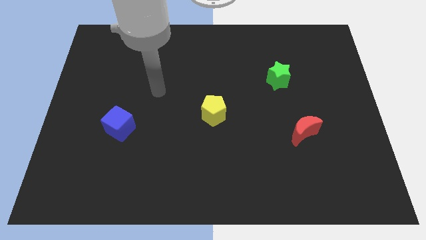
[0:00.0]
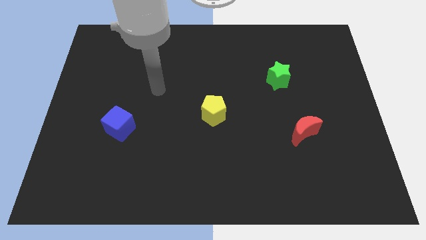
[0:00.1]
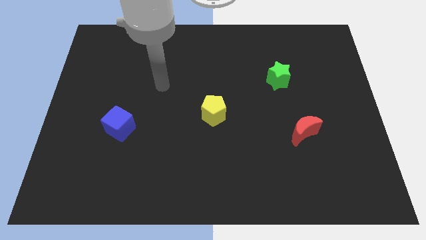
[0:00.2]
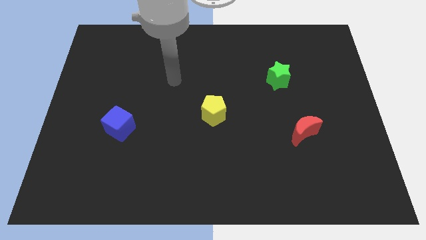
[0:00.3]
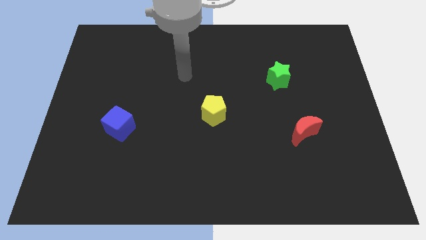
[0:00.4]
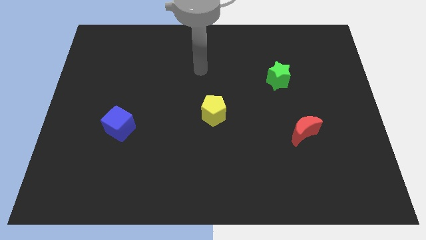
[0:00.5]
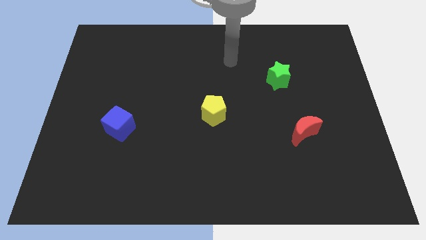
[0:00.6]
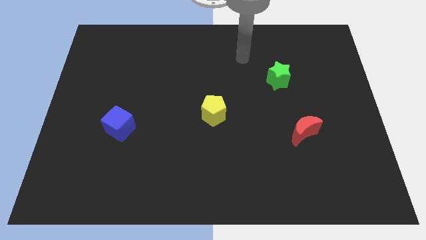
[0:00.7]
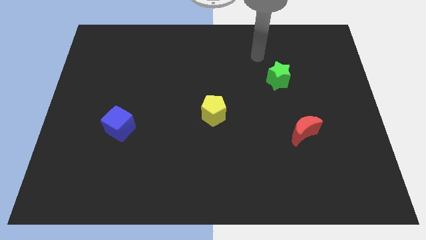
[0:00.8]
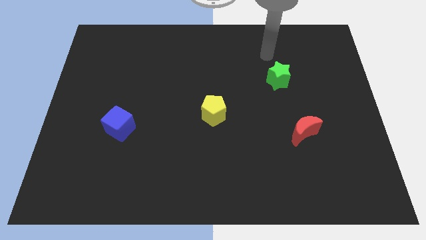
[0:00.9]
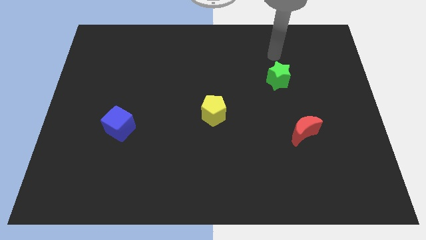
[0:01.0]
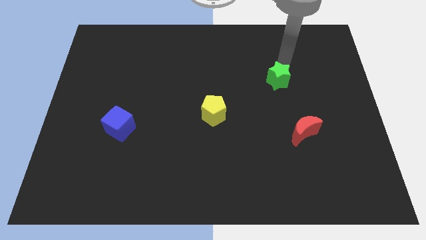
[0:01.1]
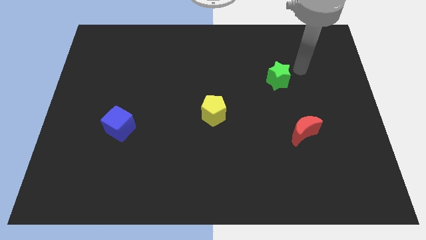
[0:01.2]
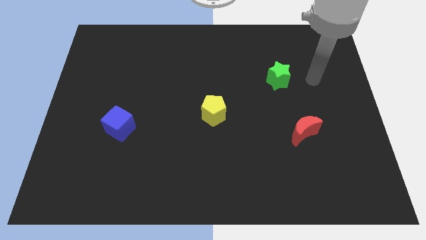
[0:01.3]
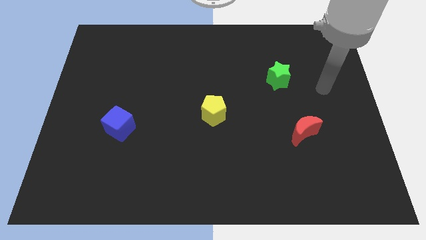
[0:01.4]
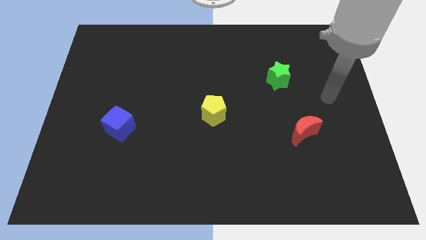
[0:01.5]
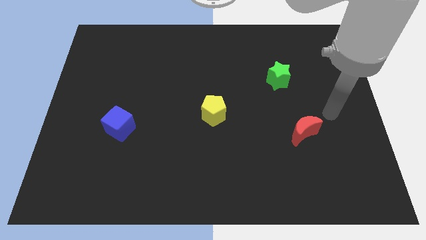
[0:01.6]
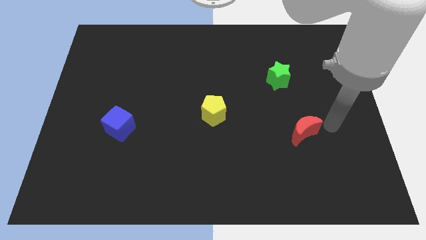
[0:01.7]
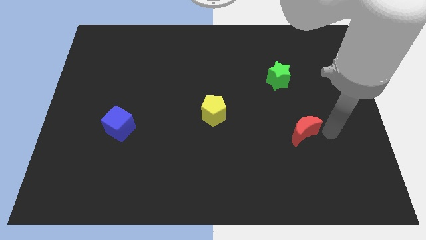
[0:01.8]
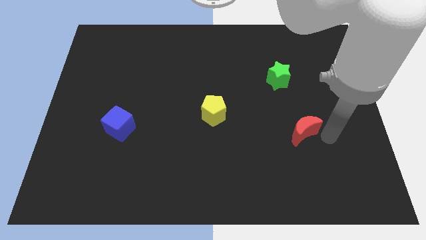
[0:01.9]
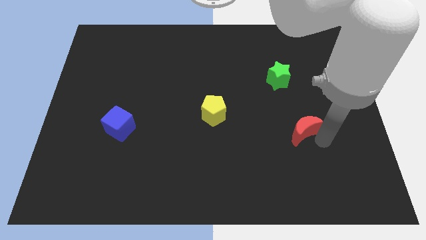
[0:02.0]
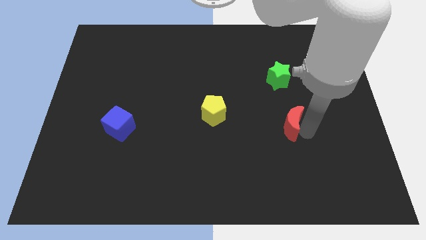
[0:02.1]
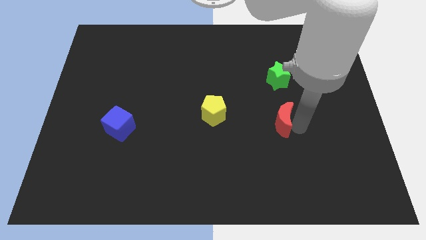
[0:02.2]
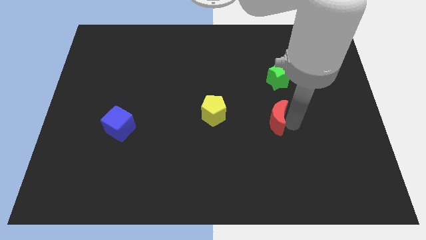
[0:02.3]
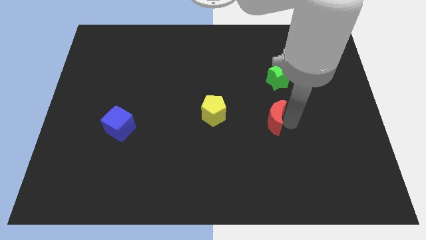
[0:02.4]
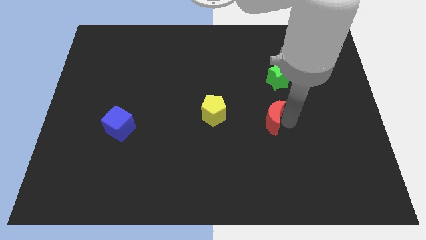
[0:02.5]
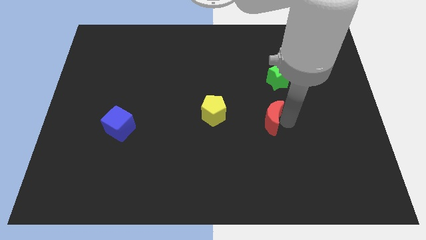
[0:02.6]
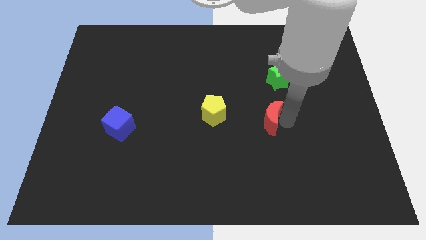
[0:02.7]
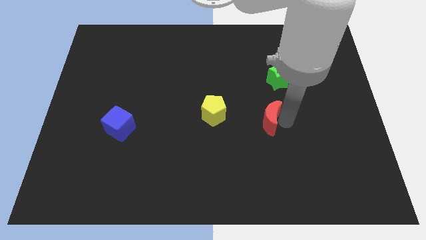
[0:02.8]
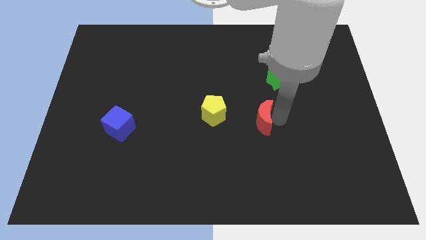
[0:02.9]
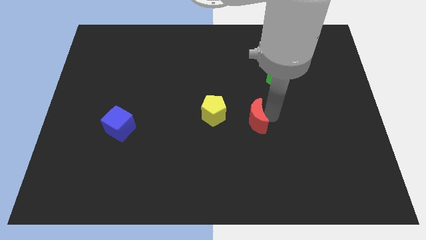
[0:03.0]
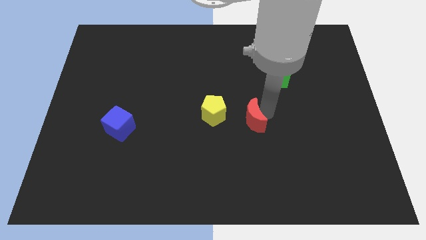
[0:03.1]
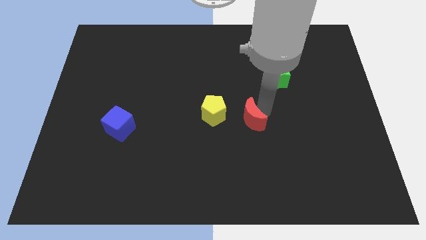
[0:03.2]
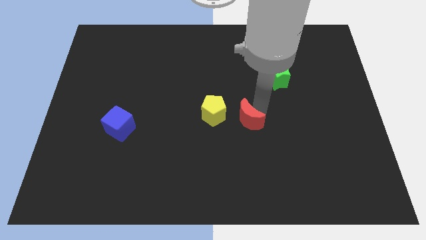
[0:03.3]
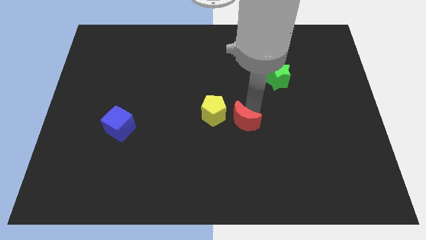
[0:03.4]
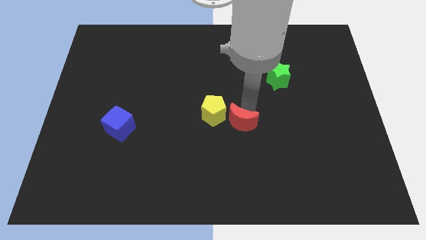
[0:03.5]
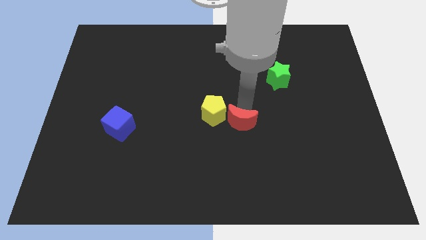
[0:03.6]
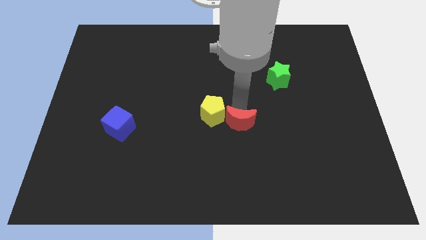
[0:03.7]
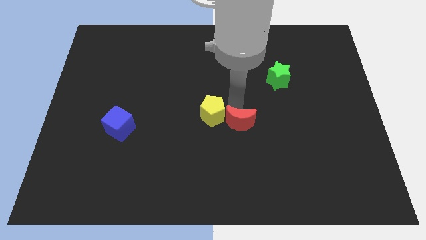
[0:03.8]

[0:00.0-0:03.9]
move the moon to the yellow block

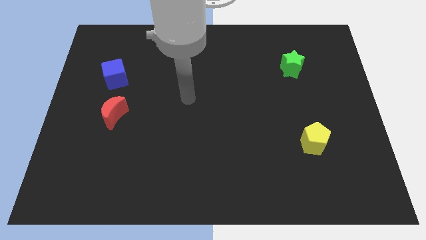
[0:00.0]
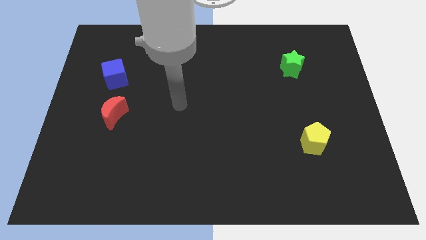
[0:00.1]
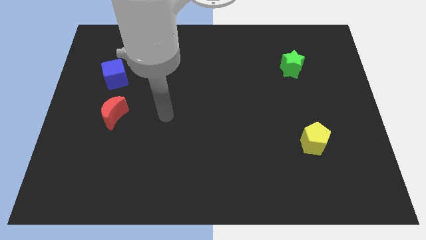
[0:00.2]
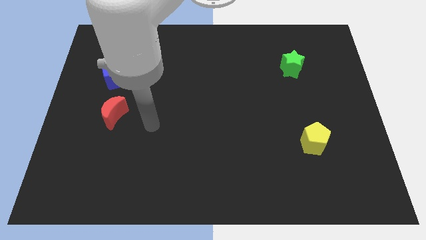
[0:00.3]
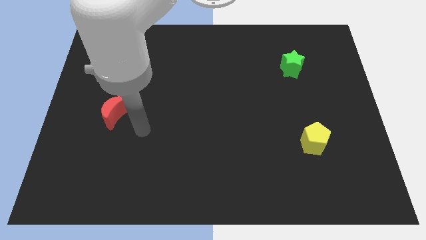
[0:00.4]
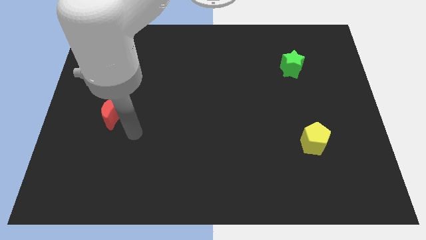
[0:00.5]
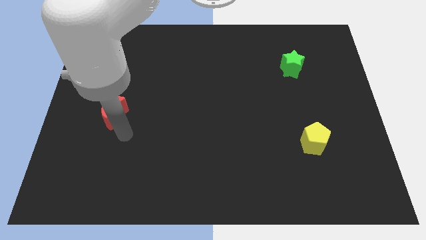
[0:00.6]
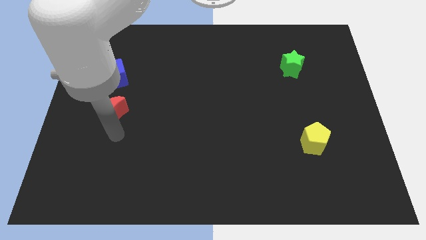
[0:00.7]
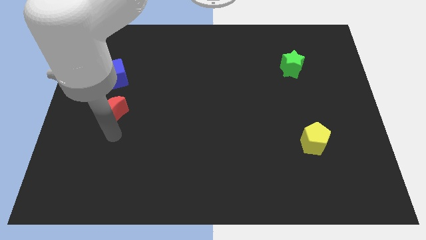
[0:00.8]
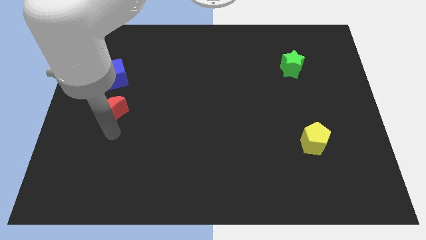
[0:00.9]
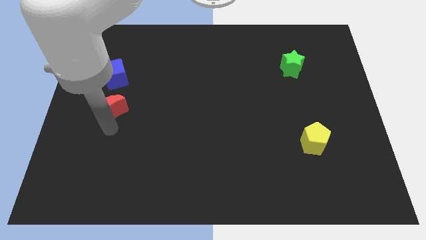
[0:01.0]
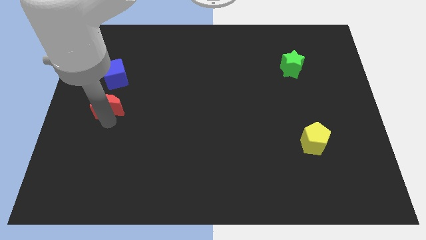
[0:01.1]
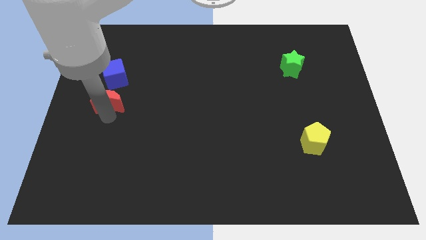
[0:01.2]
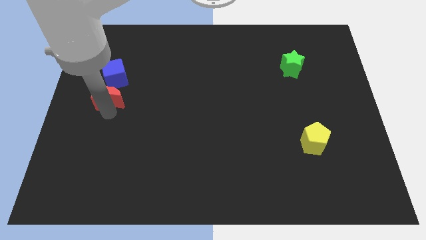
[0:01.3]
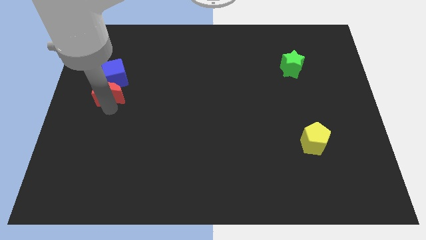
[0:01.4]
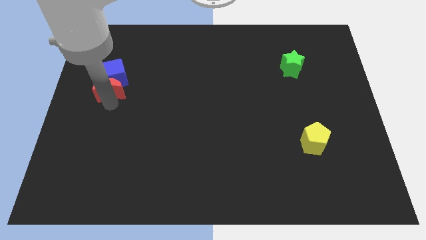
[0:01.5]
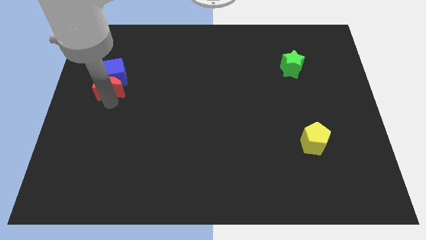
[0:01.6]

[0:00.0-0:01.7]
push the red block close to the cube

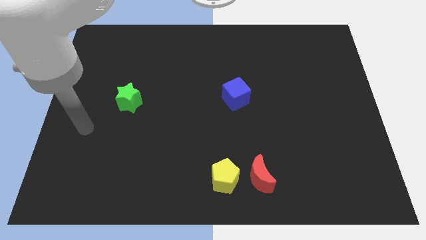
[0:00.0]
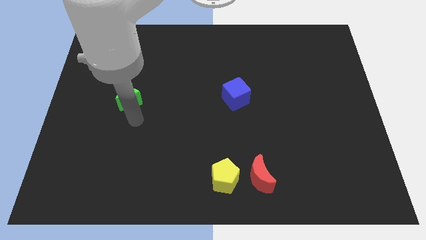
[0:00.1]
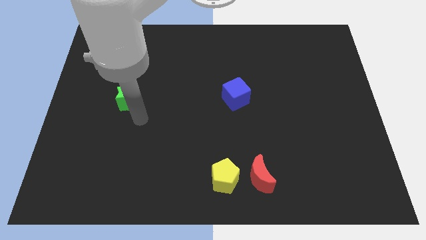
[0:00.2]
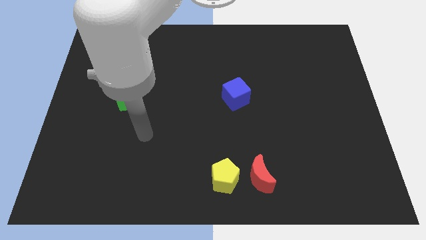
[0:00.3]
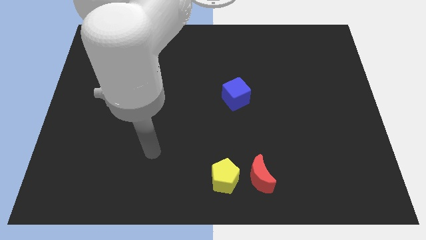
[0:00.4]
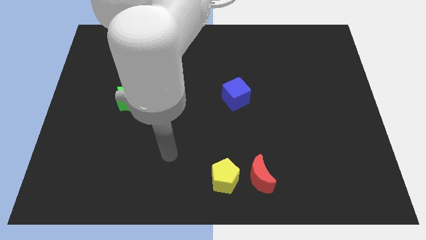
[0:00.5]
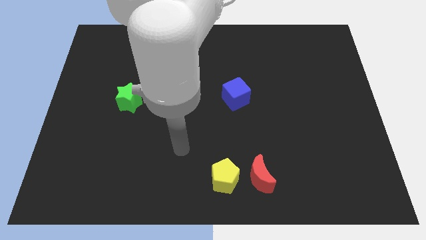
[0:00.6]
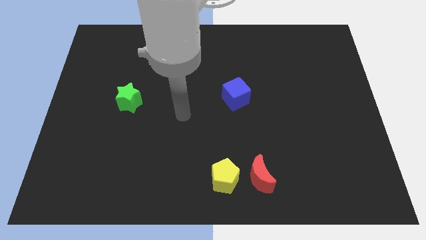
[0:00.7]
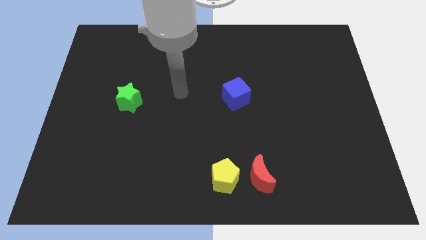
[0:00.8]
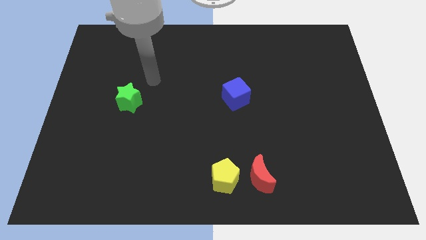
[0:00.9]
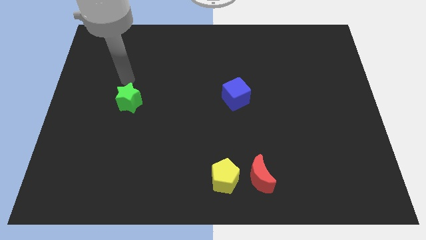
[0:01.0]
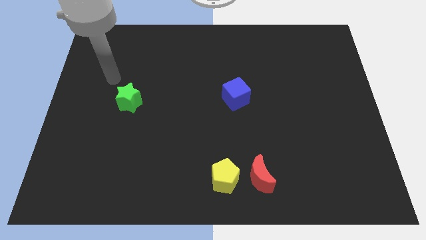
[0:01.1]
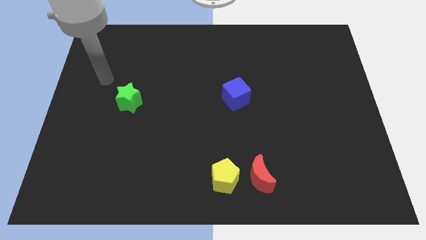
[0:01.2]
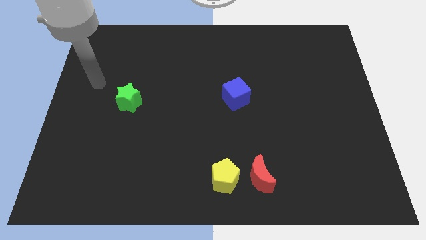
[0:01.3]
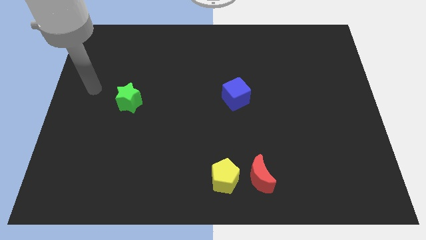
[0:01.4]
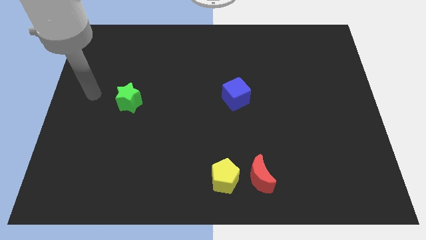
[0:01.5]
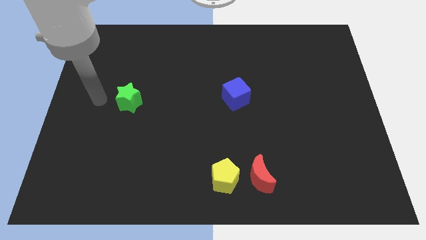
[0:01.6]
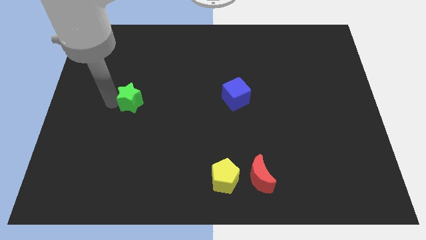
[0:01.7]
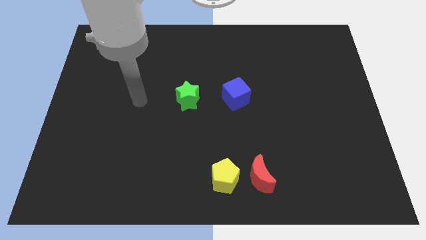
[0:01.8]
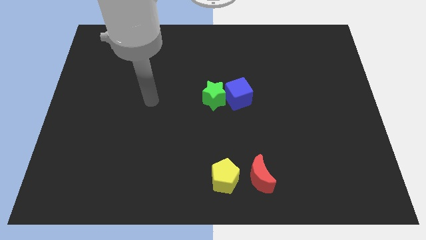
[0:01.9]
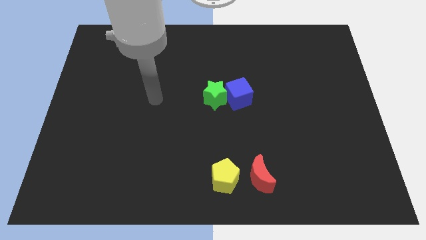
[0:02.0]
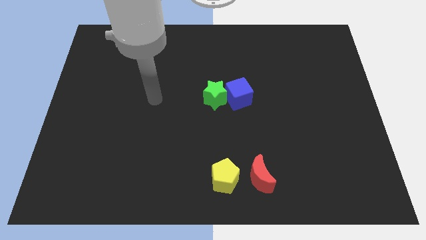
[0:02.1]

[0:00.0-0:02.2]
put the star towards the blue block
